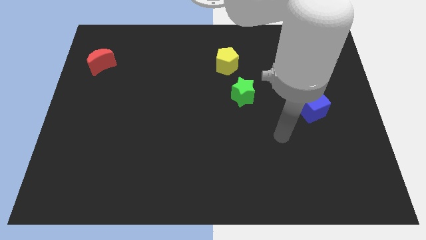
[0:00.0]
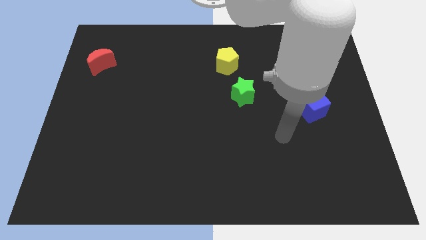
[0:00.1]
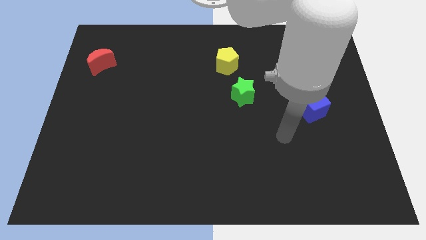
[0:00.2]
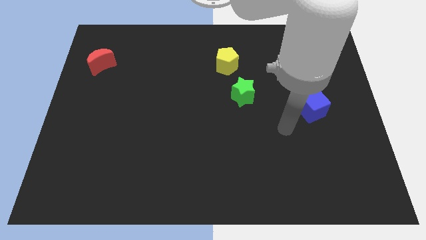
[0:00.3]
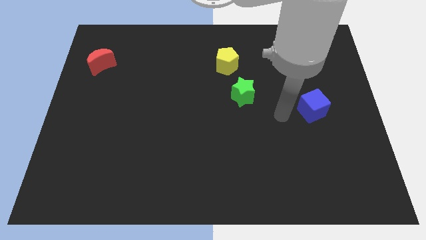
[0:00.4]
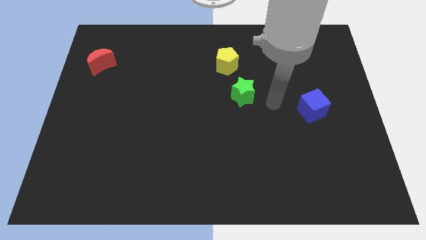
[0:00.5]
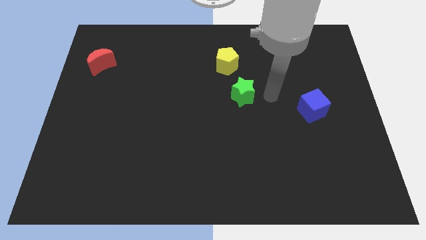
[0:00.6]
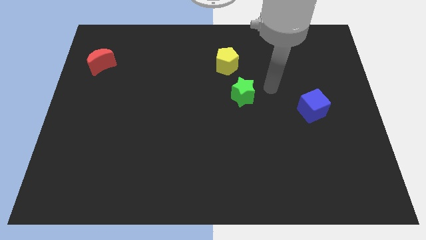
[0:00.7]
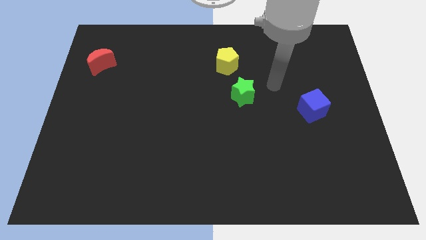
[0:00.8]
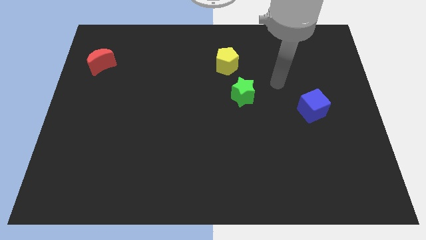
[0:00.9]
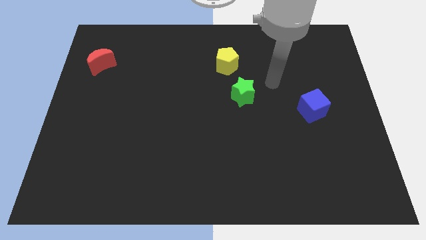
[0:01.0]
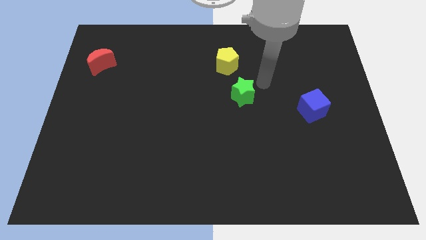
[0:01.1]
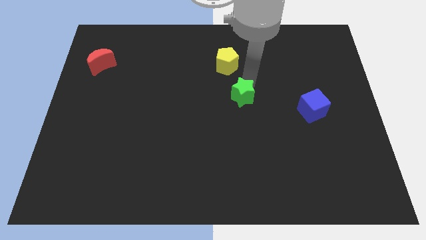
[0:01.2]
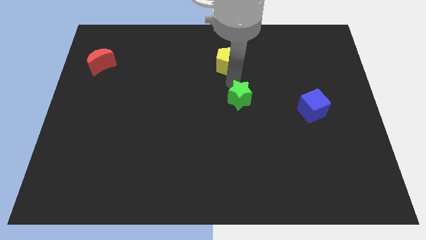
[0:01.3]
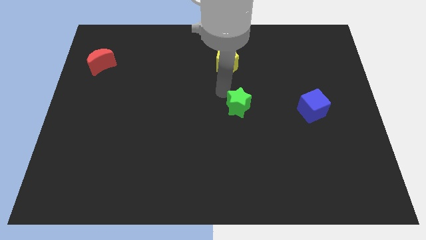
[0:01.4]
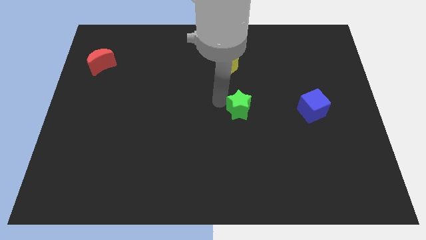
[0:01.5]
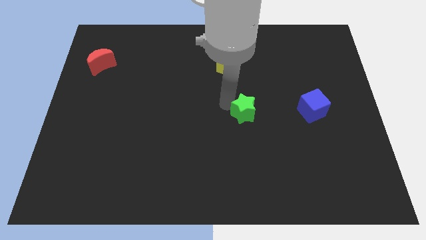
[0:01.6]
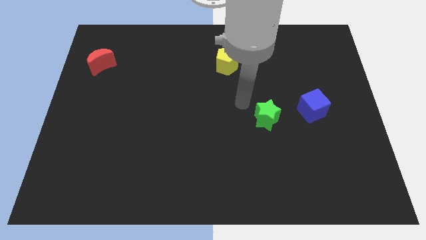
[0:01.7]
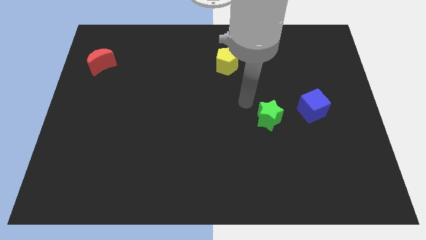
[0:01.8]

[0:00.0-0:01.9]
move the green star towards the left side of the blue cube

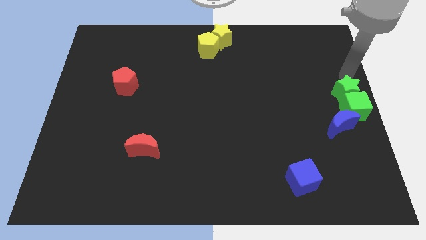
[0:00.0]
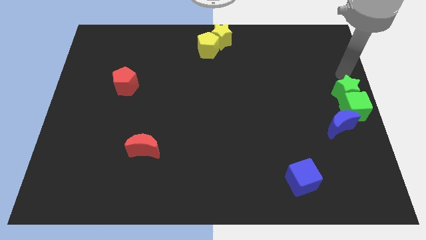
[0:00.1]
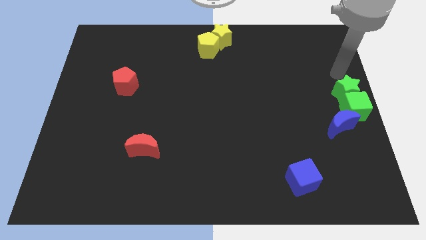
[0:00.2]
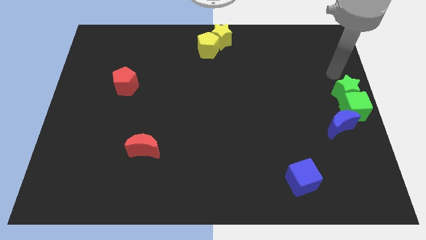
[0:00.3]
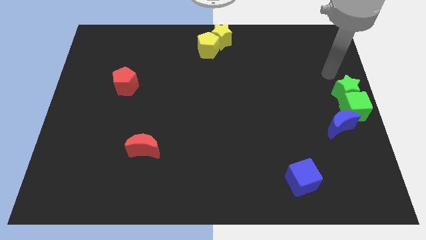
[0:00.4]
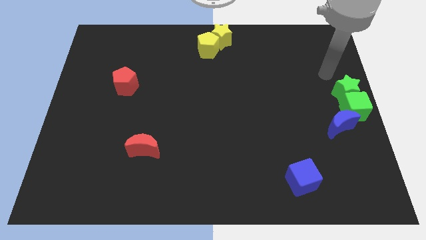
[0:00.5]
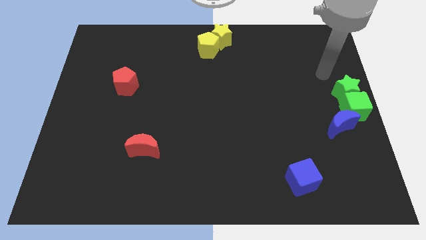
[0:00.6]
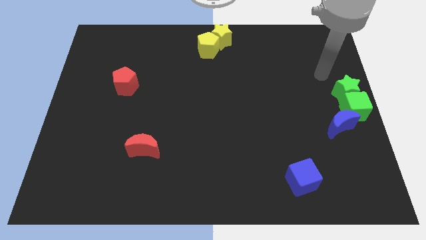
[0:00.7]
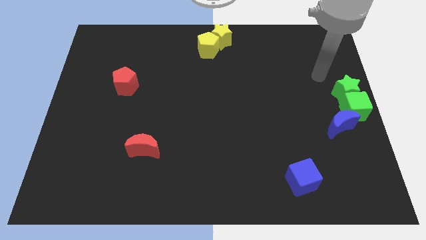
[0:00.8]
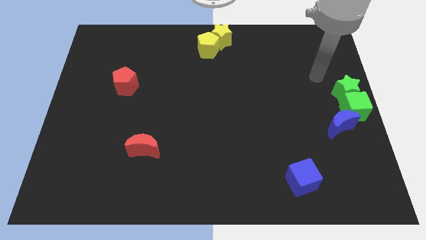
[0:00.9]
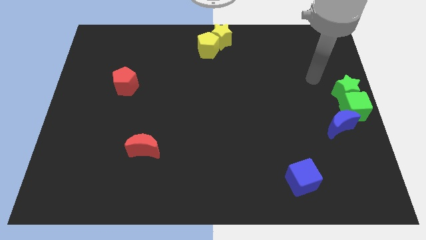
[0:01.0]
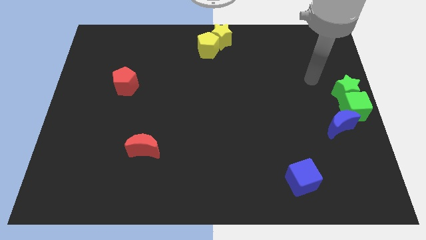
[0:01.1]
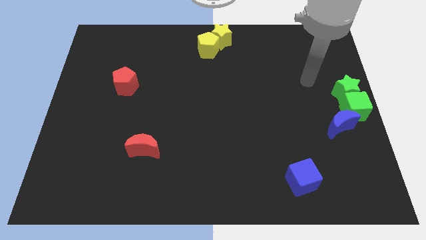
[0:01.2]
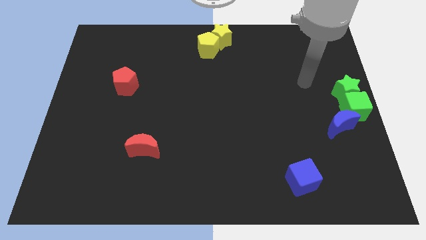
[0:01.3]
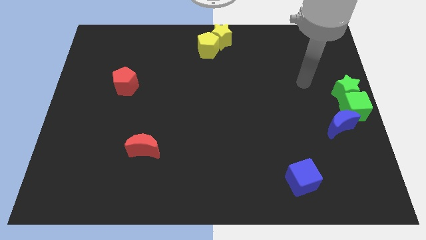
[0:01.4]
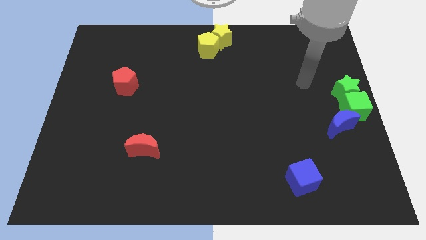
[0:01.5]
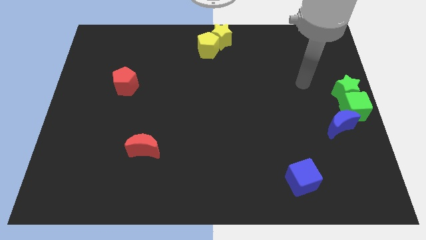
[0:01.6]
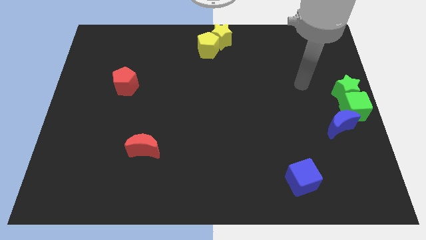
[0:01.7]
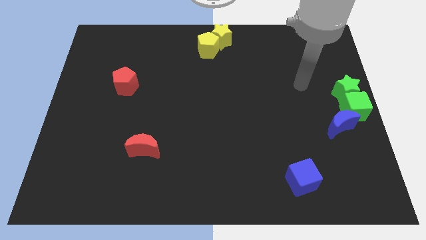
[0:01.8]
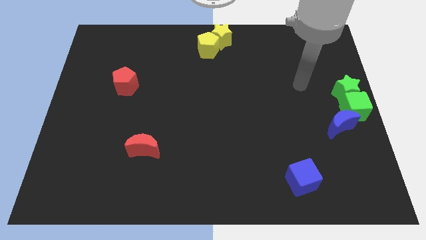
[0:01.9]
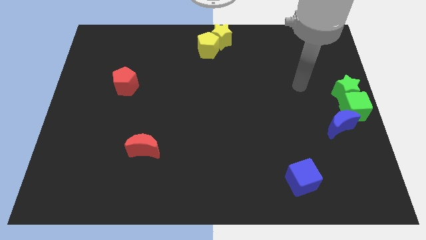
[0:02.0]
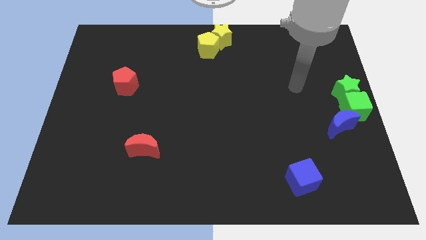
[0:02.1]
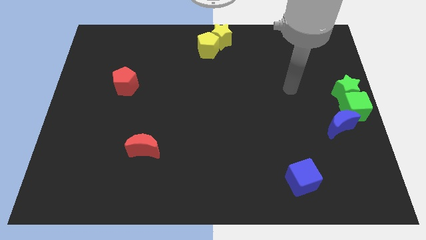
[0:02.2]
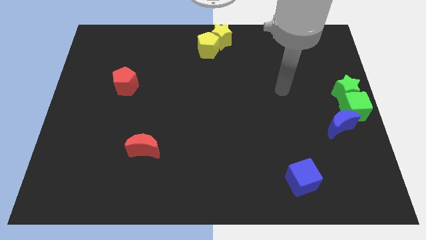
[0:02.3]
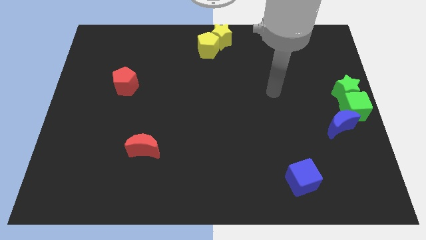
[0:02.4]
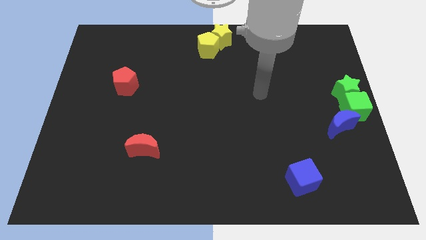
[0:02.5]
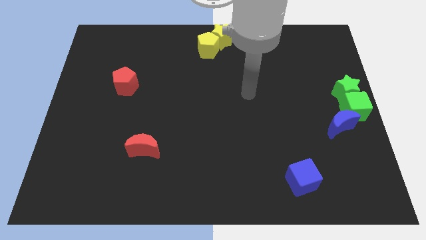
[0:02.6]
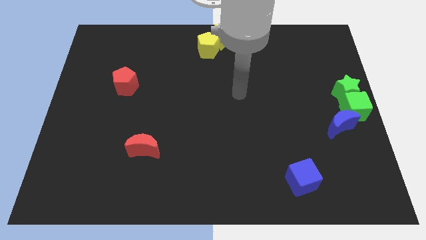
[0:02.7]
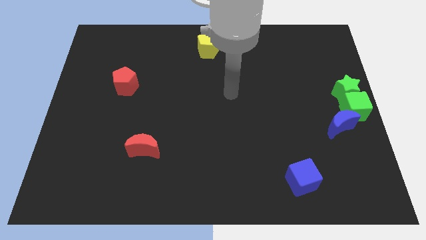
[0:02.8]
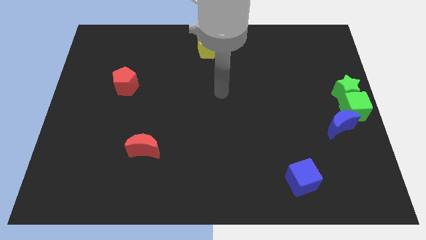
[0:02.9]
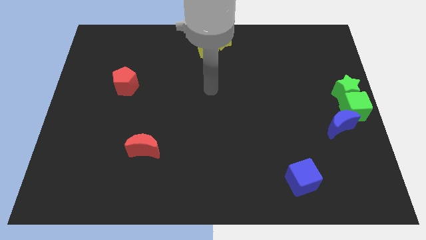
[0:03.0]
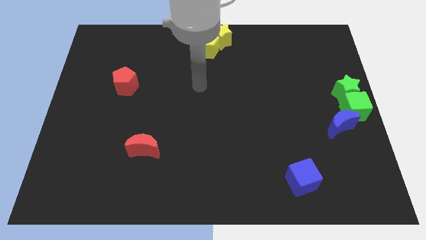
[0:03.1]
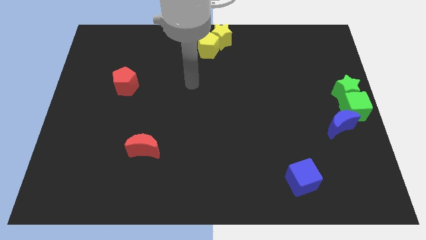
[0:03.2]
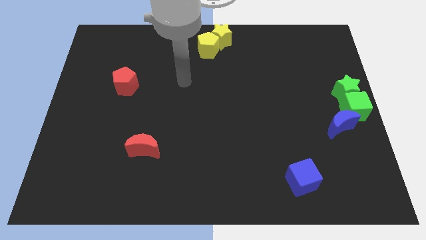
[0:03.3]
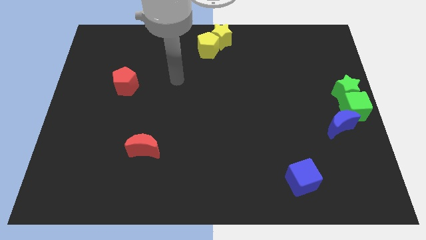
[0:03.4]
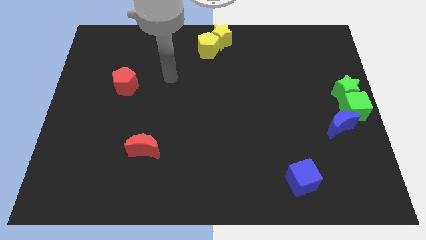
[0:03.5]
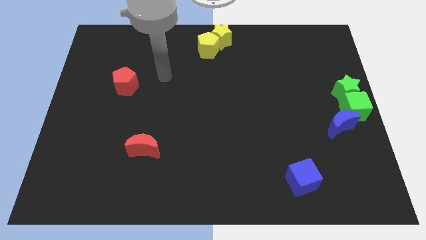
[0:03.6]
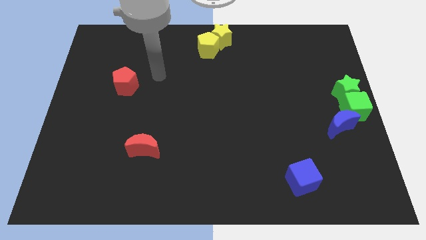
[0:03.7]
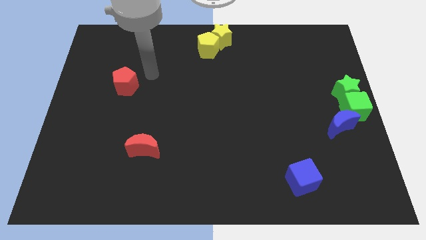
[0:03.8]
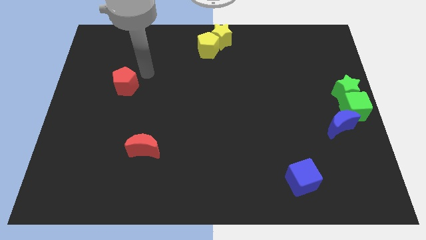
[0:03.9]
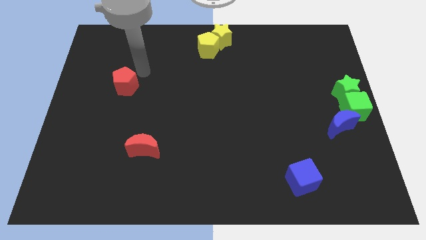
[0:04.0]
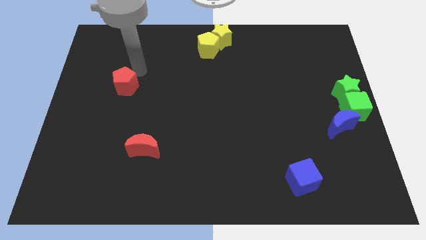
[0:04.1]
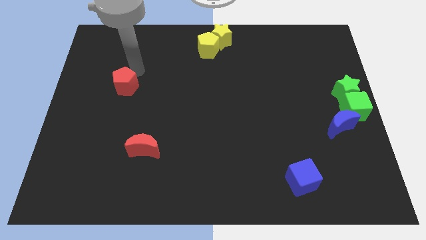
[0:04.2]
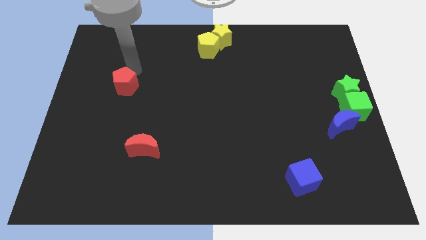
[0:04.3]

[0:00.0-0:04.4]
point the arm to the top of the red pentagon

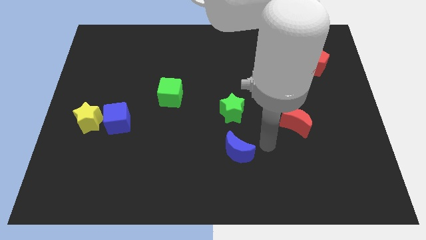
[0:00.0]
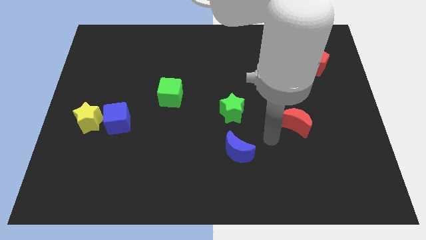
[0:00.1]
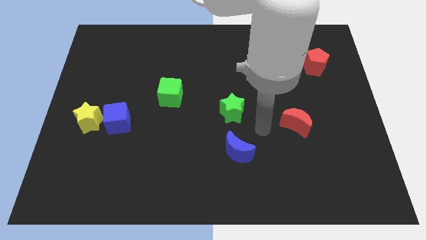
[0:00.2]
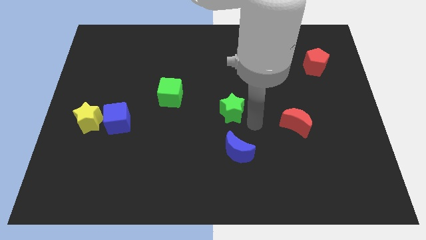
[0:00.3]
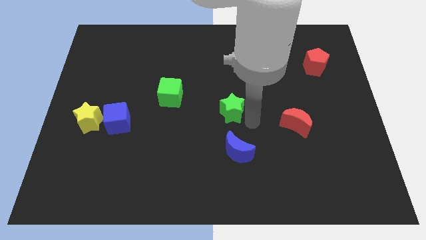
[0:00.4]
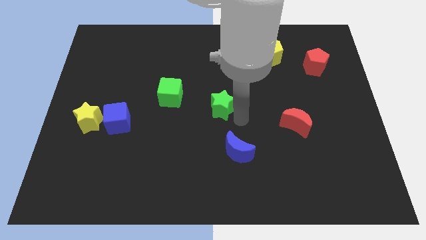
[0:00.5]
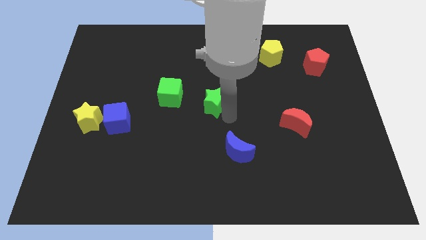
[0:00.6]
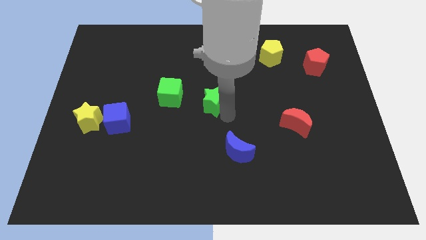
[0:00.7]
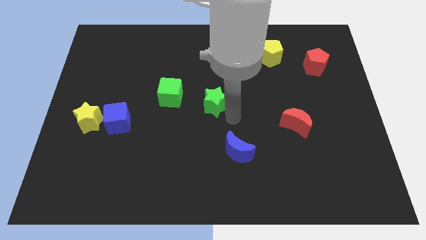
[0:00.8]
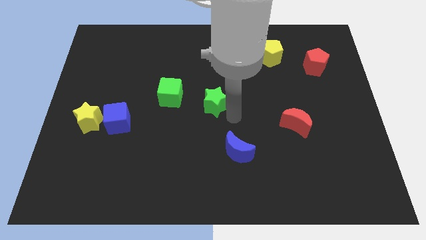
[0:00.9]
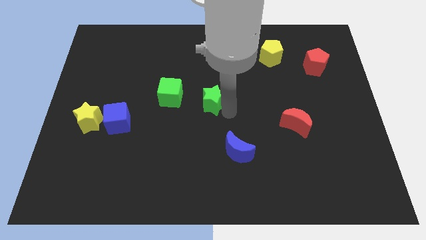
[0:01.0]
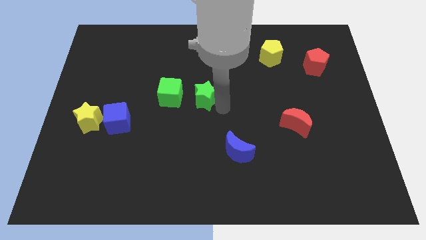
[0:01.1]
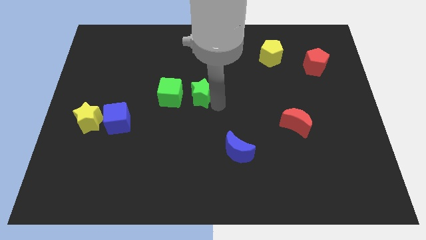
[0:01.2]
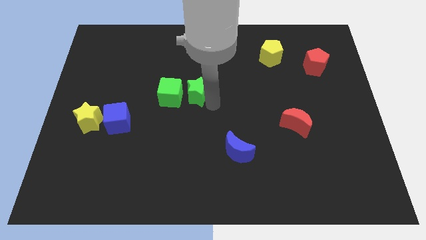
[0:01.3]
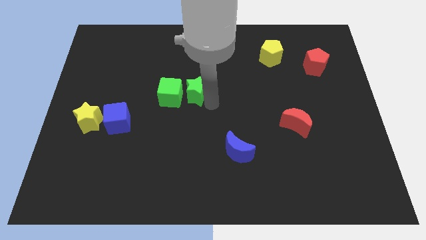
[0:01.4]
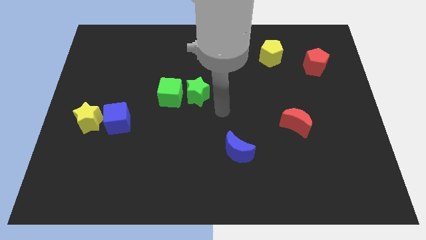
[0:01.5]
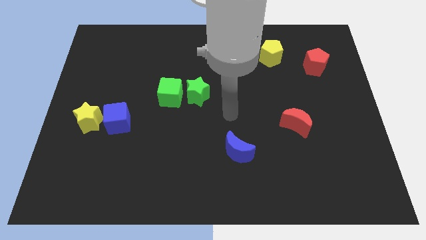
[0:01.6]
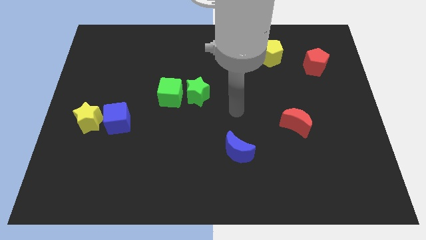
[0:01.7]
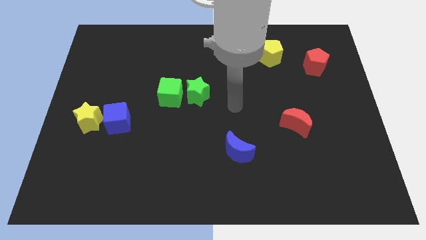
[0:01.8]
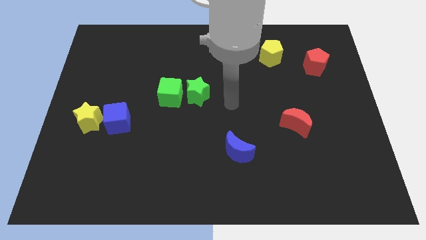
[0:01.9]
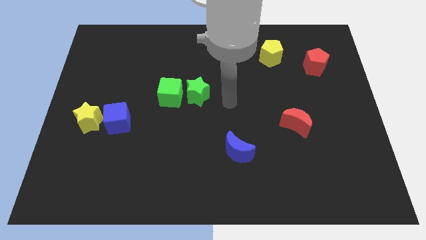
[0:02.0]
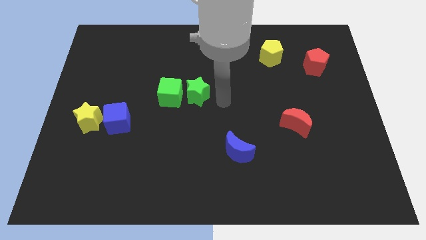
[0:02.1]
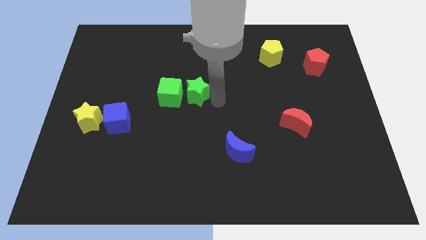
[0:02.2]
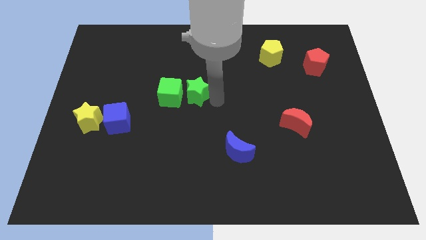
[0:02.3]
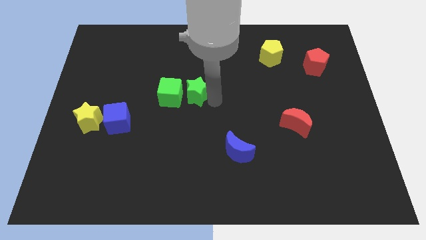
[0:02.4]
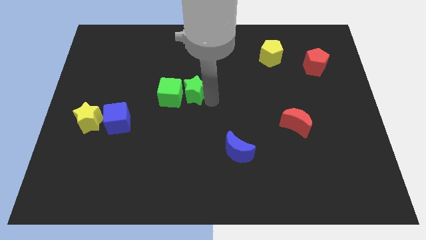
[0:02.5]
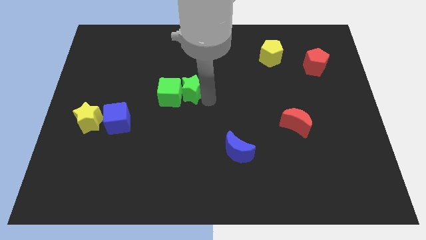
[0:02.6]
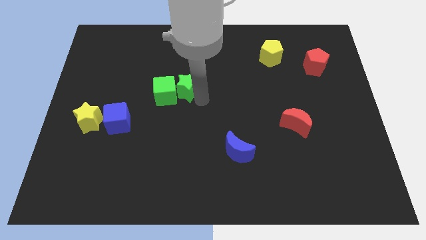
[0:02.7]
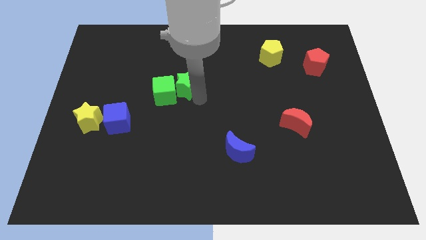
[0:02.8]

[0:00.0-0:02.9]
push green star beside green cube
